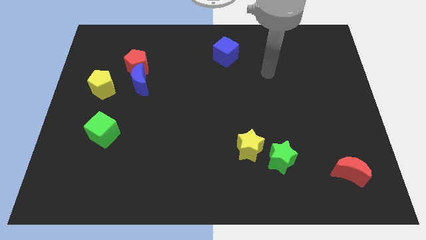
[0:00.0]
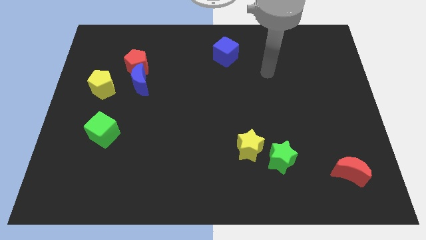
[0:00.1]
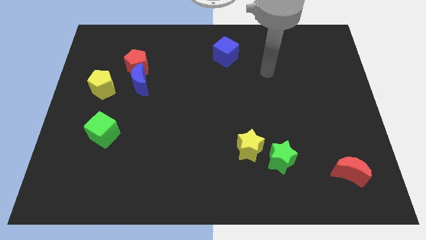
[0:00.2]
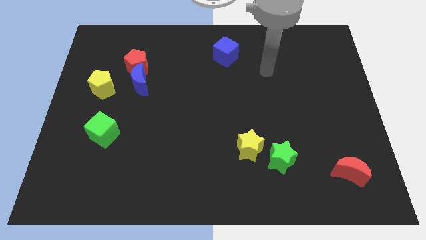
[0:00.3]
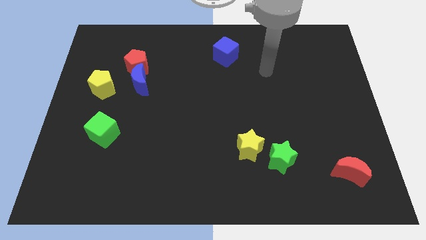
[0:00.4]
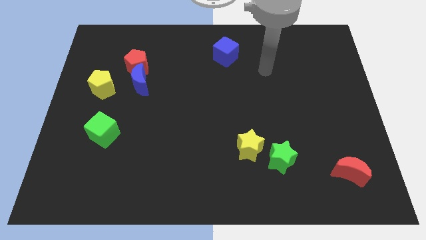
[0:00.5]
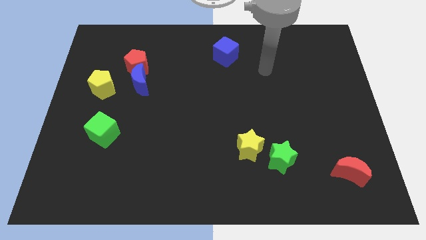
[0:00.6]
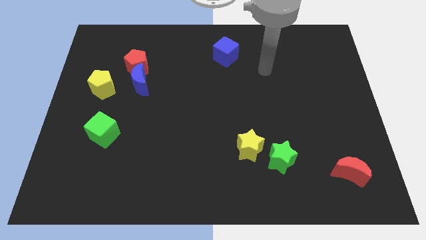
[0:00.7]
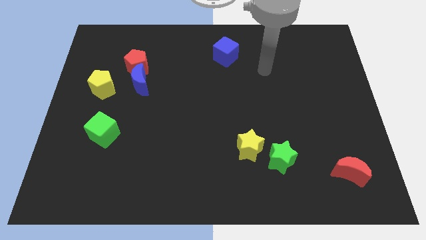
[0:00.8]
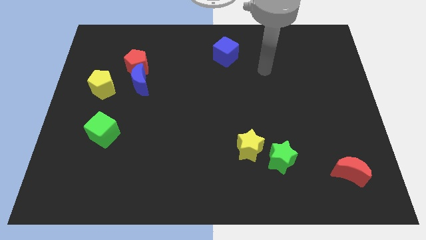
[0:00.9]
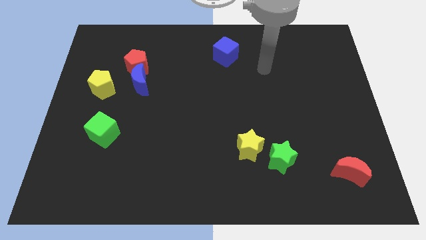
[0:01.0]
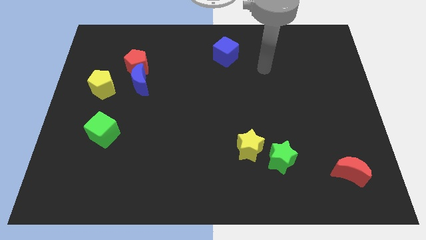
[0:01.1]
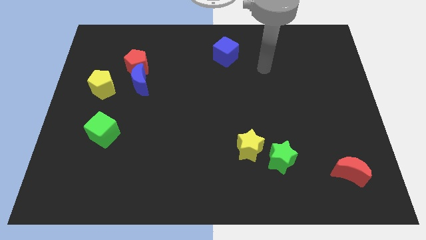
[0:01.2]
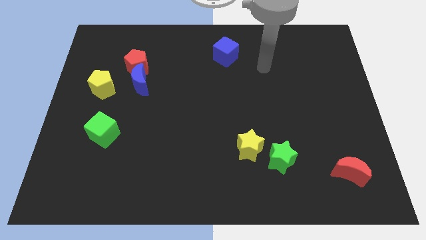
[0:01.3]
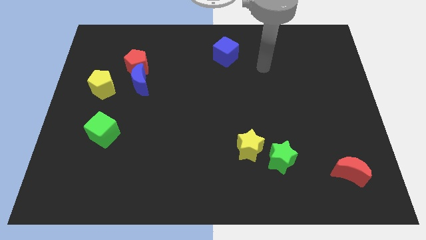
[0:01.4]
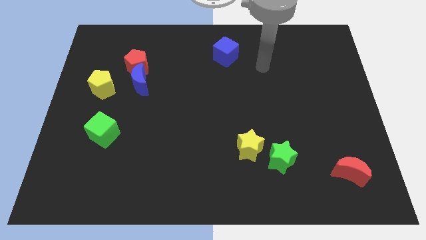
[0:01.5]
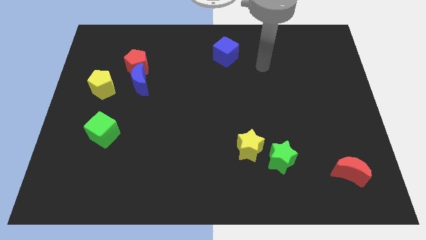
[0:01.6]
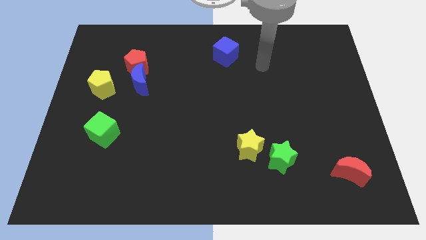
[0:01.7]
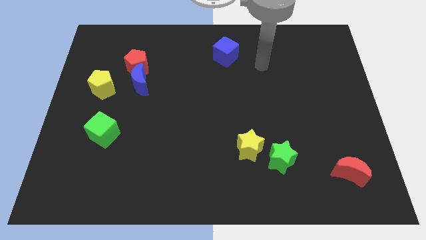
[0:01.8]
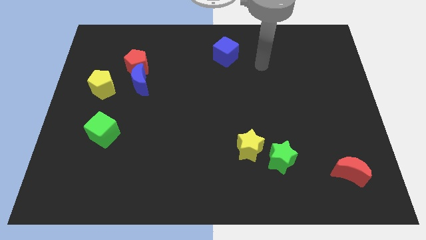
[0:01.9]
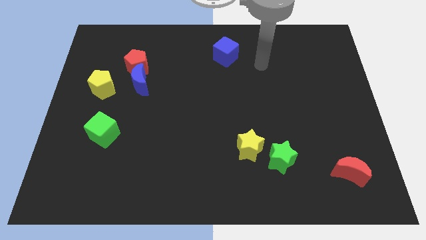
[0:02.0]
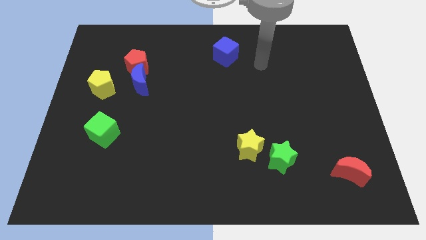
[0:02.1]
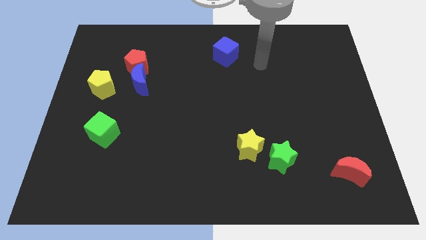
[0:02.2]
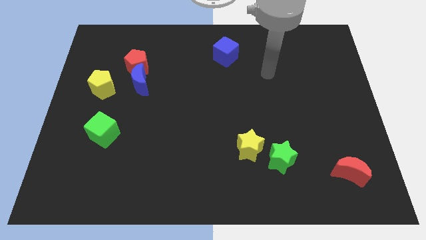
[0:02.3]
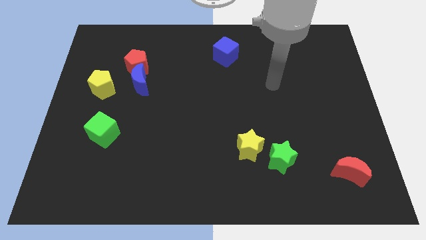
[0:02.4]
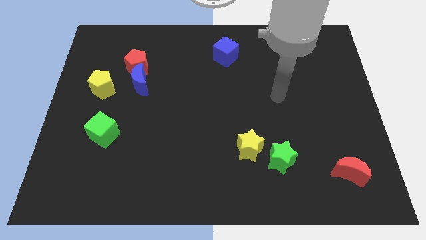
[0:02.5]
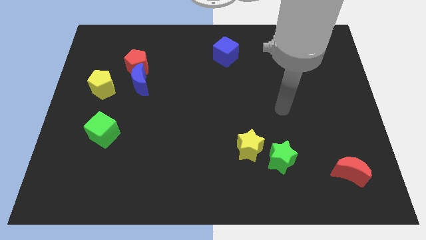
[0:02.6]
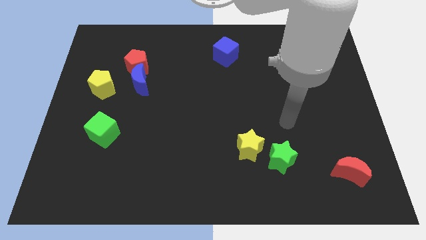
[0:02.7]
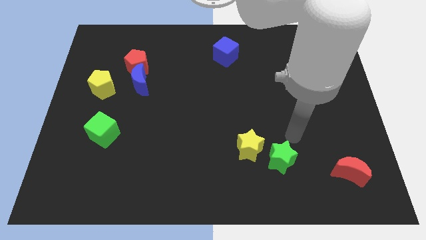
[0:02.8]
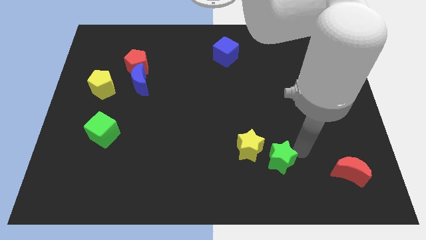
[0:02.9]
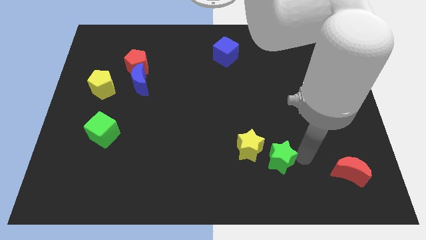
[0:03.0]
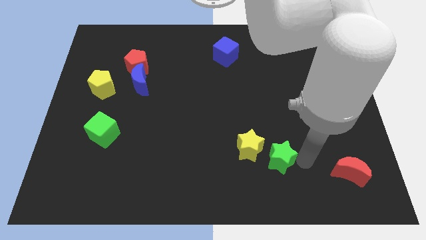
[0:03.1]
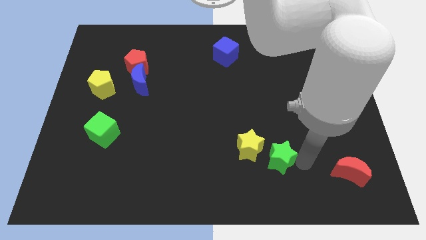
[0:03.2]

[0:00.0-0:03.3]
move the arm towards green star

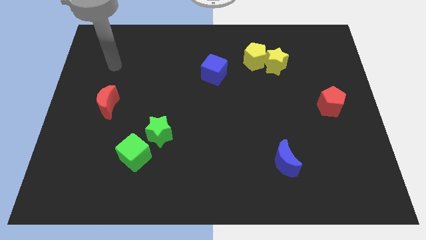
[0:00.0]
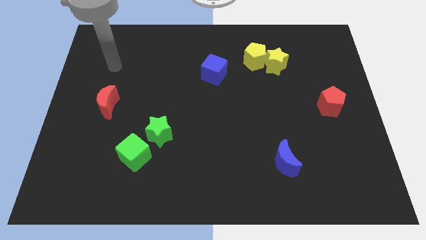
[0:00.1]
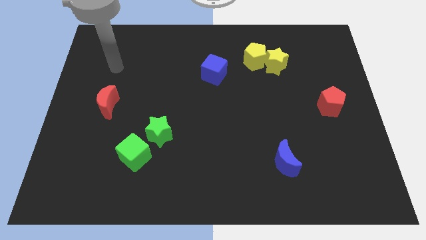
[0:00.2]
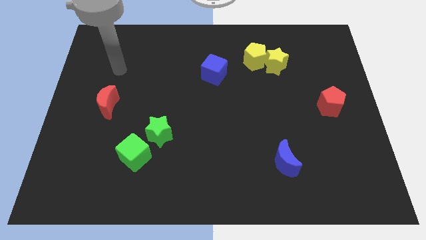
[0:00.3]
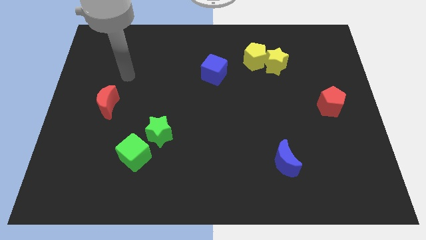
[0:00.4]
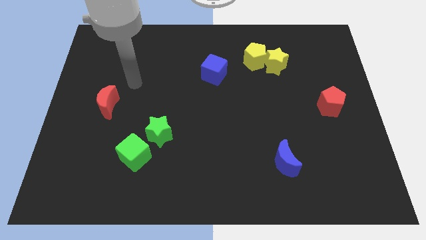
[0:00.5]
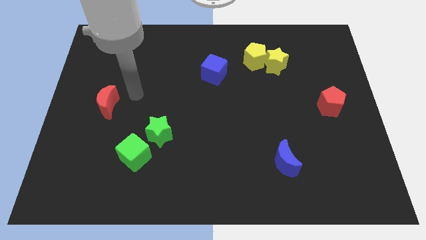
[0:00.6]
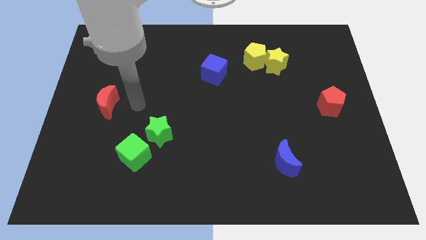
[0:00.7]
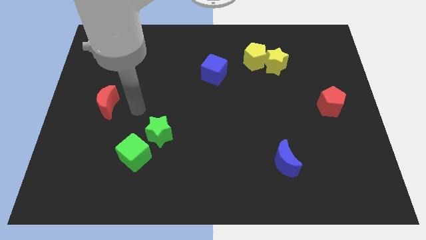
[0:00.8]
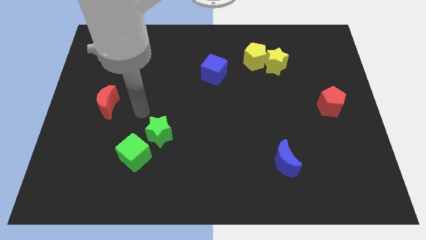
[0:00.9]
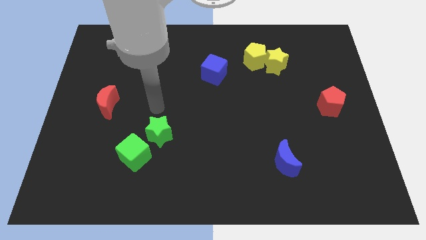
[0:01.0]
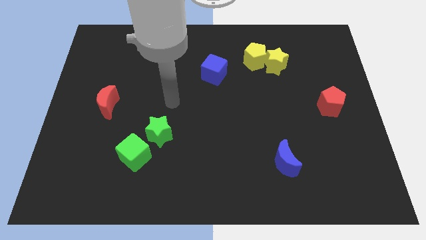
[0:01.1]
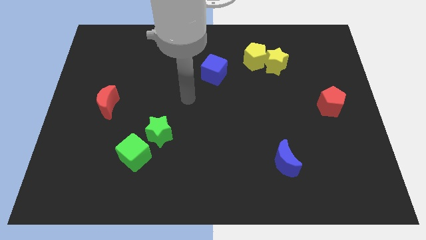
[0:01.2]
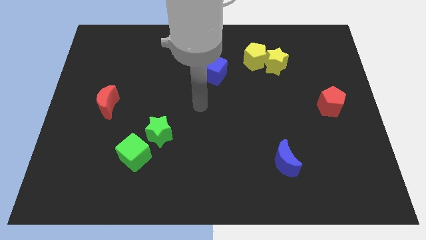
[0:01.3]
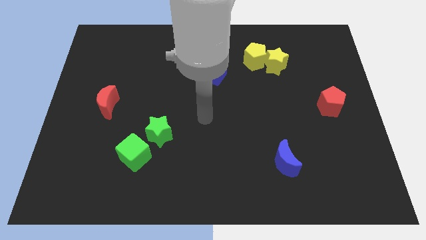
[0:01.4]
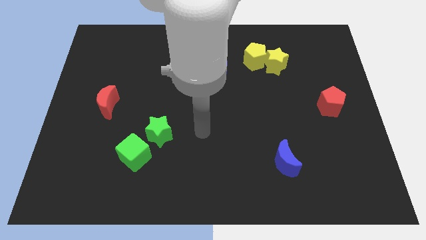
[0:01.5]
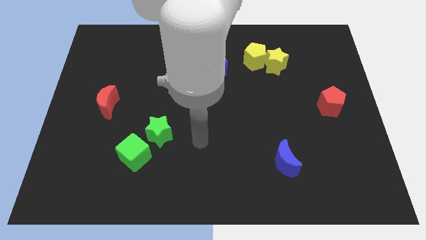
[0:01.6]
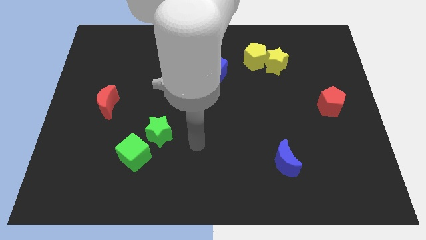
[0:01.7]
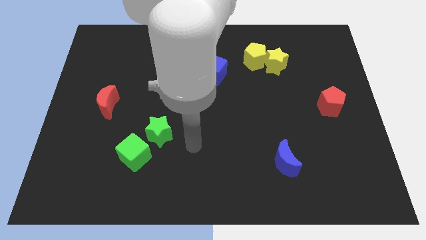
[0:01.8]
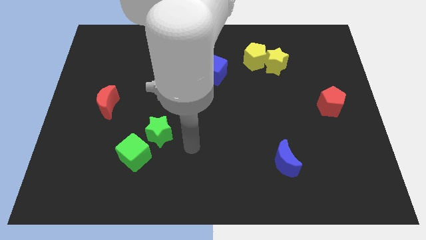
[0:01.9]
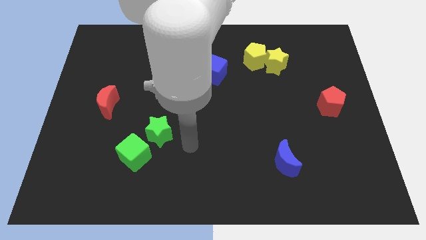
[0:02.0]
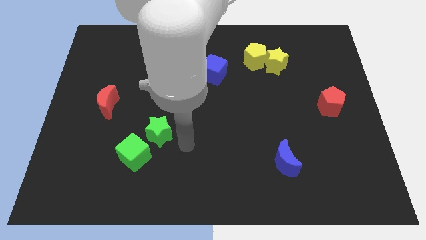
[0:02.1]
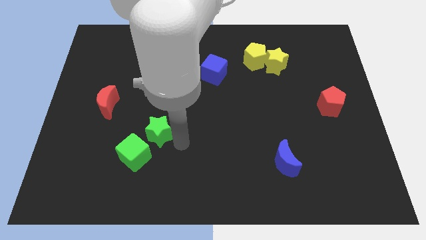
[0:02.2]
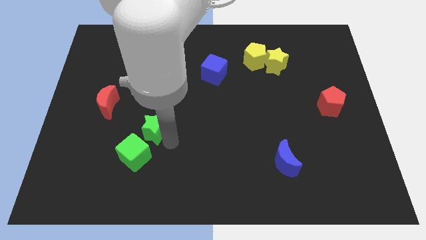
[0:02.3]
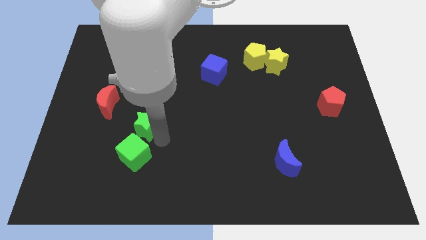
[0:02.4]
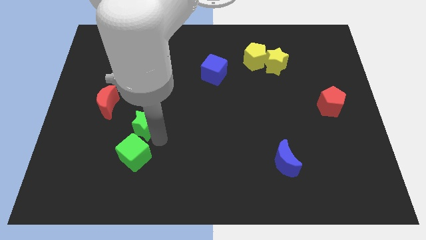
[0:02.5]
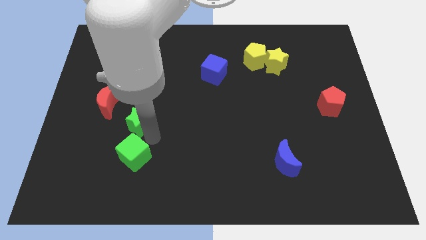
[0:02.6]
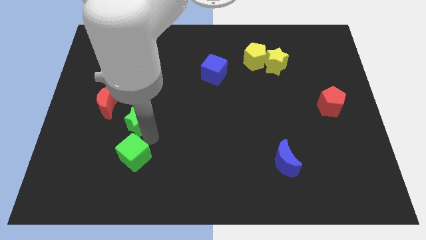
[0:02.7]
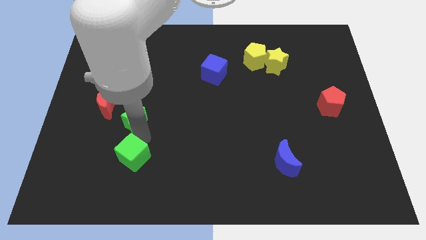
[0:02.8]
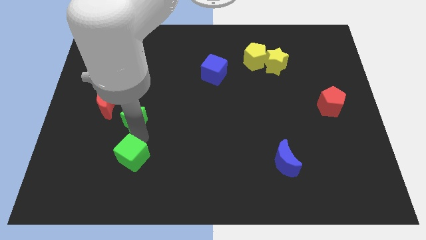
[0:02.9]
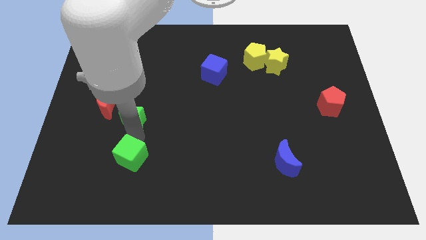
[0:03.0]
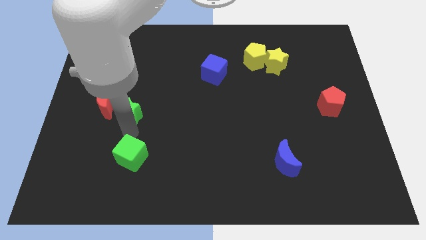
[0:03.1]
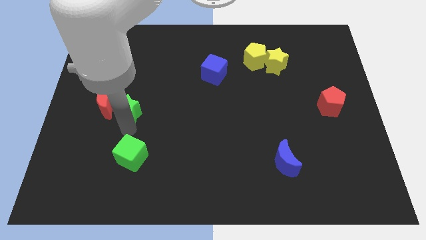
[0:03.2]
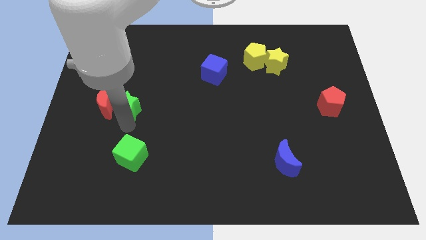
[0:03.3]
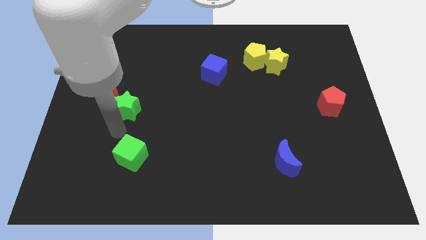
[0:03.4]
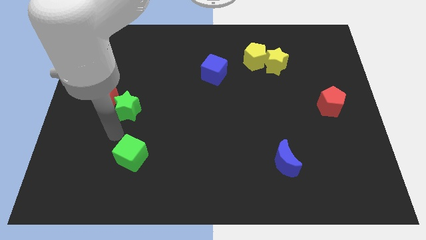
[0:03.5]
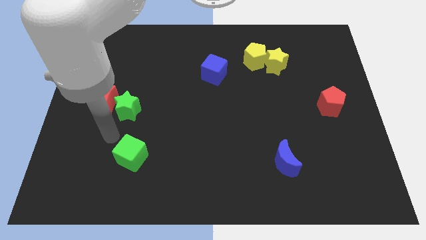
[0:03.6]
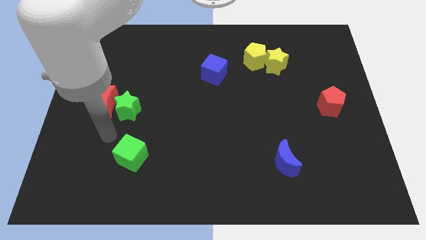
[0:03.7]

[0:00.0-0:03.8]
move the green star towards the red crescent

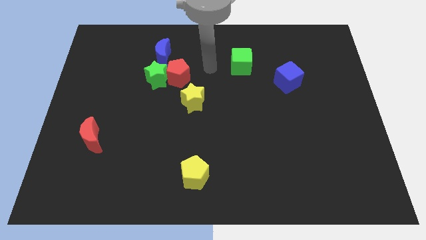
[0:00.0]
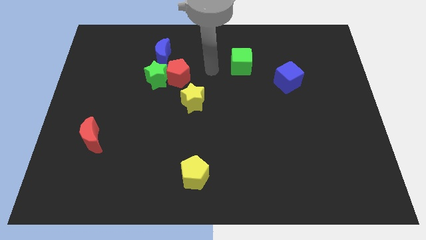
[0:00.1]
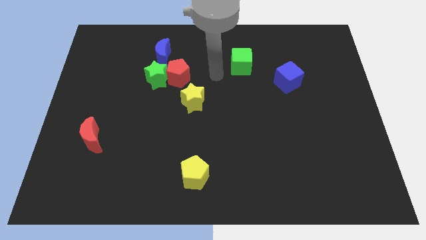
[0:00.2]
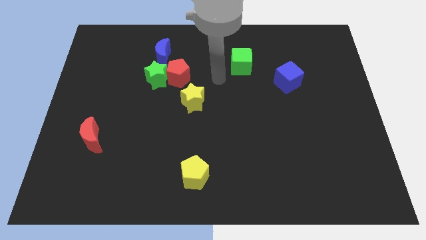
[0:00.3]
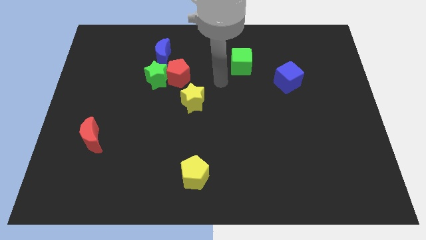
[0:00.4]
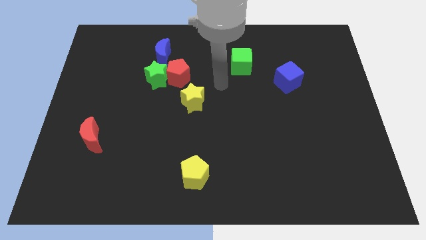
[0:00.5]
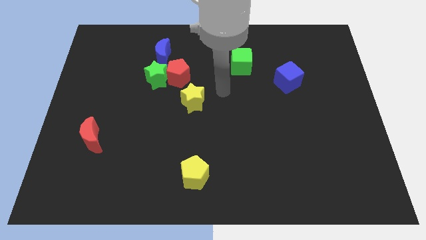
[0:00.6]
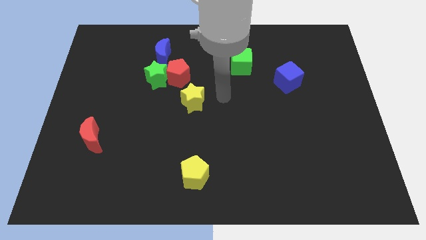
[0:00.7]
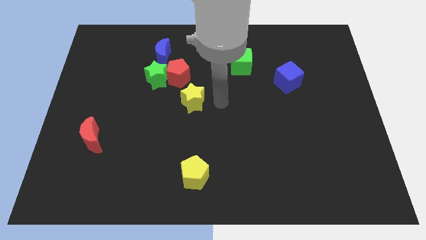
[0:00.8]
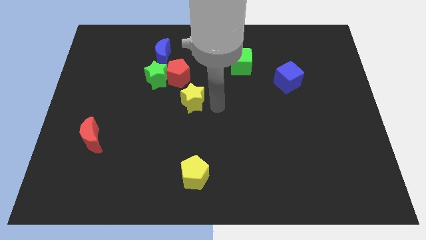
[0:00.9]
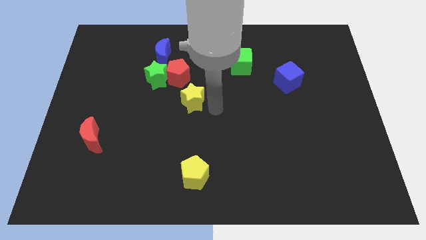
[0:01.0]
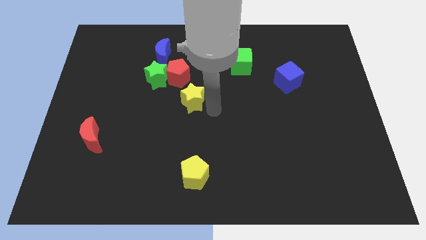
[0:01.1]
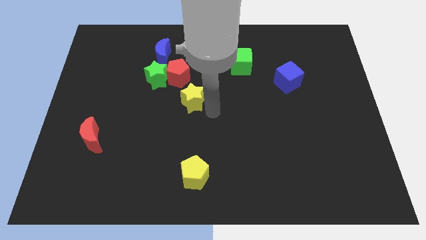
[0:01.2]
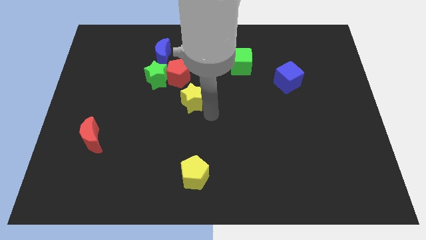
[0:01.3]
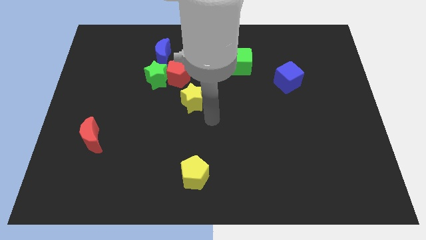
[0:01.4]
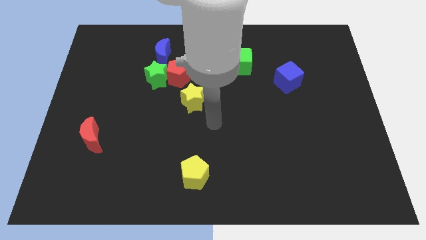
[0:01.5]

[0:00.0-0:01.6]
point your arm below yellow star
